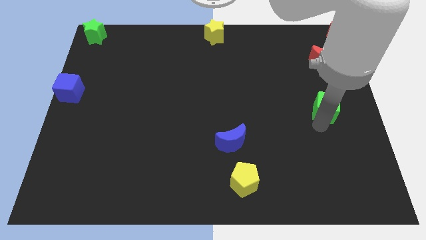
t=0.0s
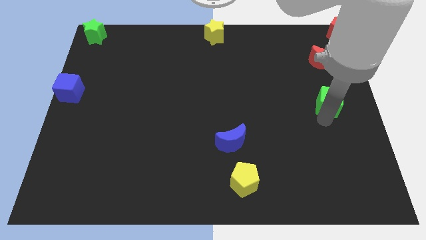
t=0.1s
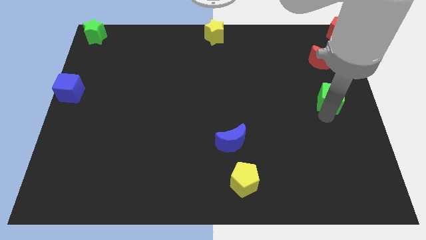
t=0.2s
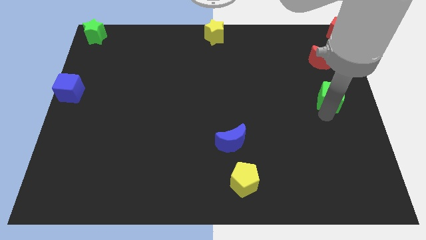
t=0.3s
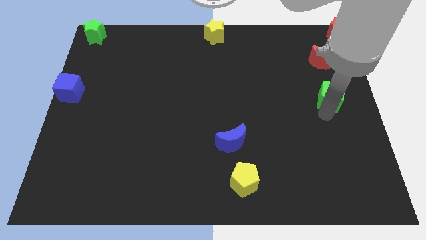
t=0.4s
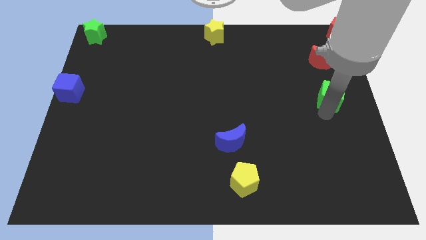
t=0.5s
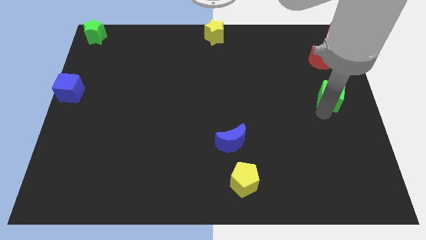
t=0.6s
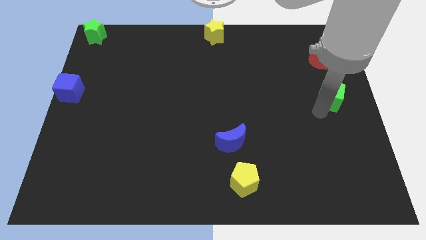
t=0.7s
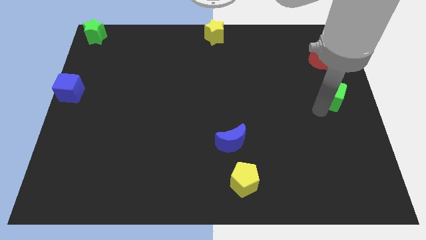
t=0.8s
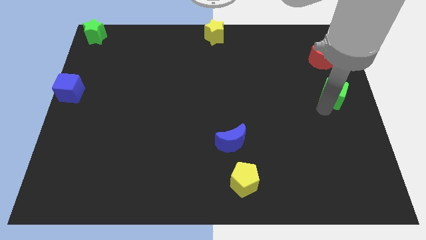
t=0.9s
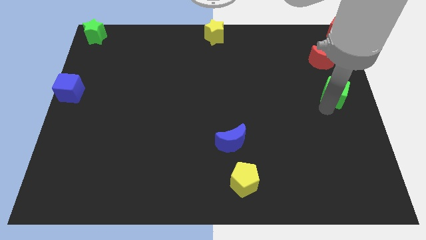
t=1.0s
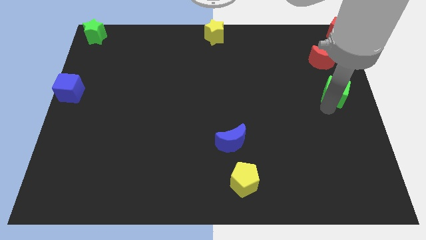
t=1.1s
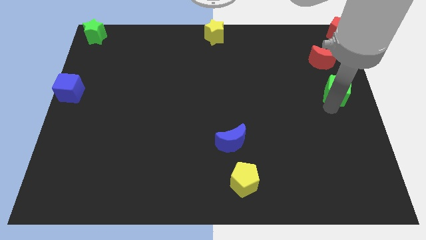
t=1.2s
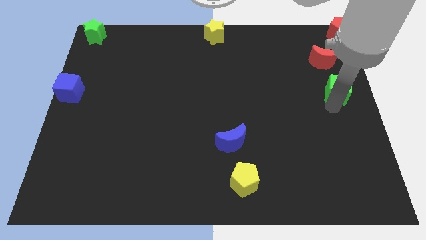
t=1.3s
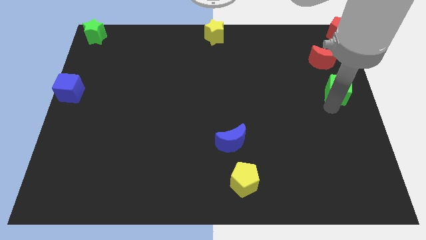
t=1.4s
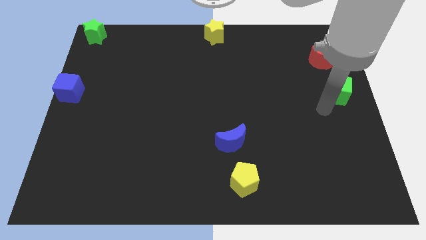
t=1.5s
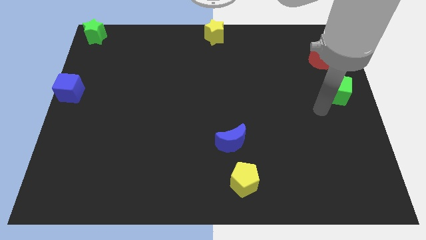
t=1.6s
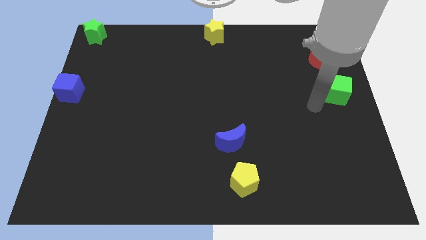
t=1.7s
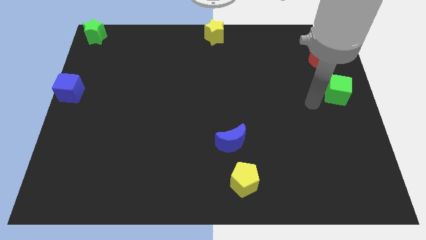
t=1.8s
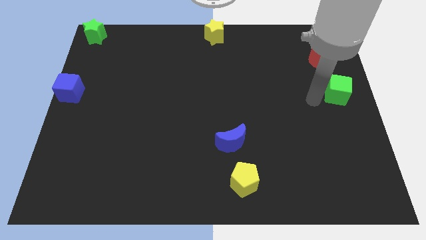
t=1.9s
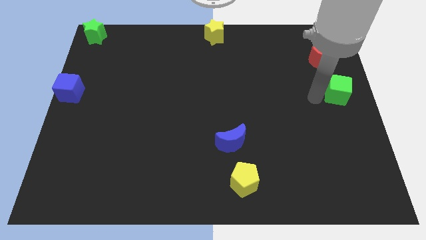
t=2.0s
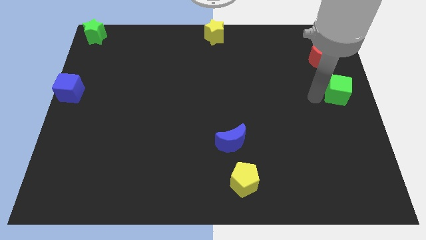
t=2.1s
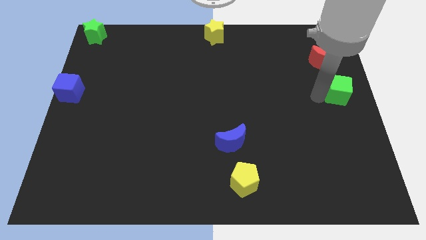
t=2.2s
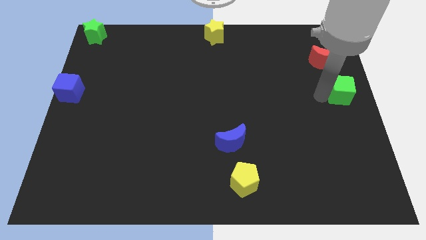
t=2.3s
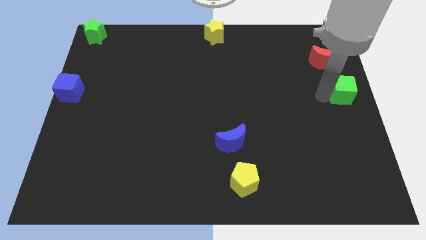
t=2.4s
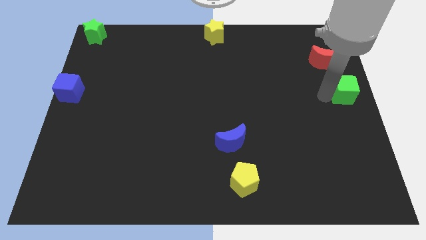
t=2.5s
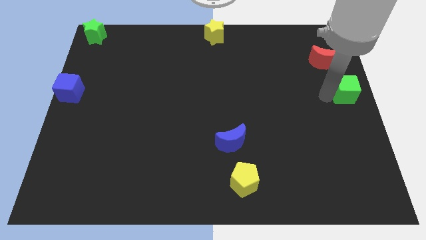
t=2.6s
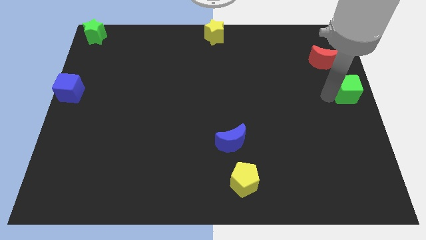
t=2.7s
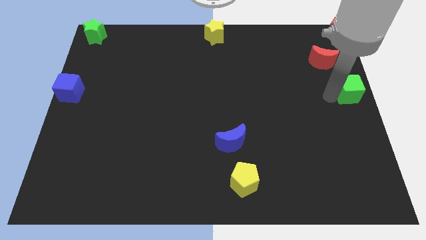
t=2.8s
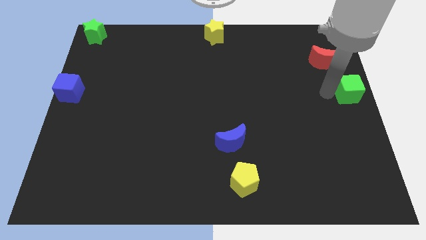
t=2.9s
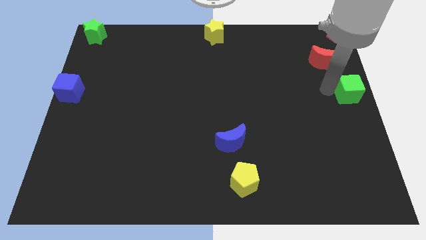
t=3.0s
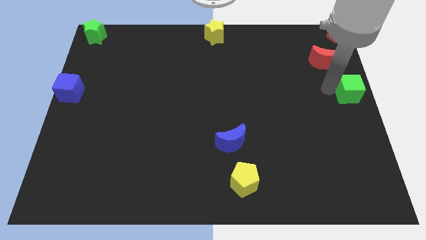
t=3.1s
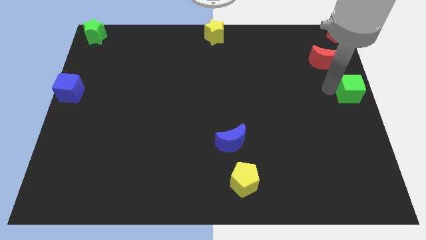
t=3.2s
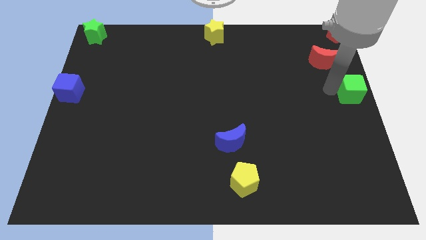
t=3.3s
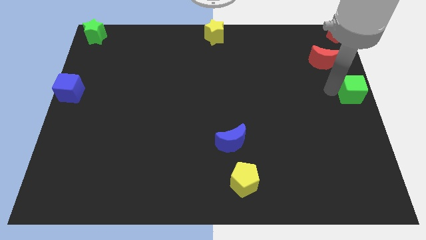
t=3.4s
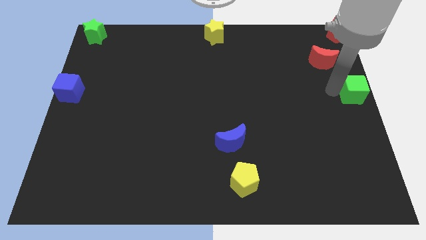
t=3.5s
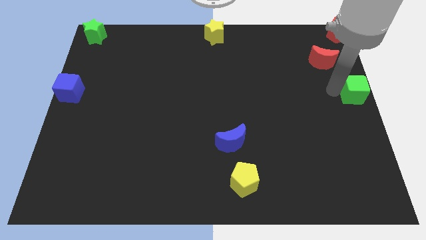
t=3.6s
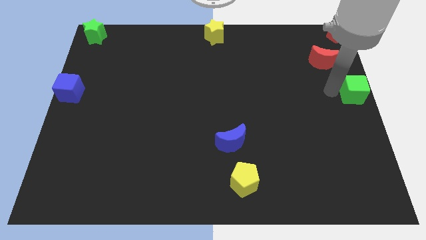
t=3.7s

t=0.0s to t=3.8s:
move the green cube to the right side of the table

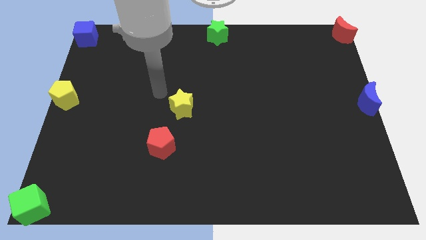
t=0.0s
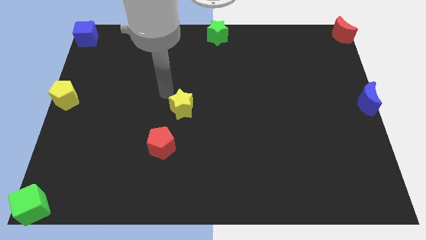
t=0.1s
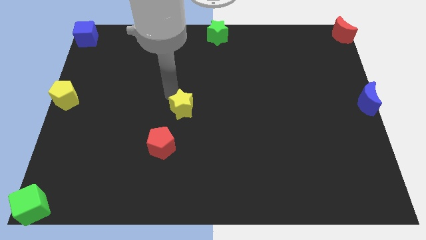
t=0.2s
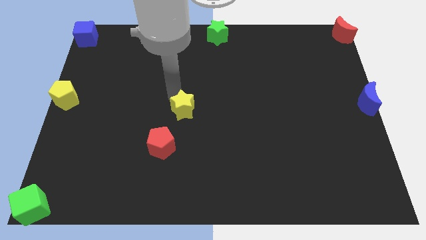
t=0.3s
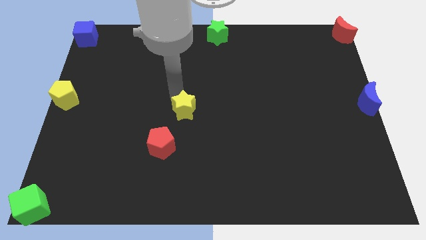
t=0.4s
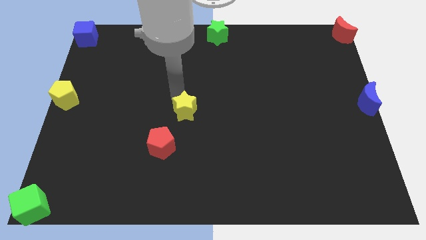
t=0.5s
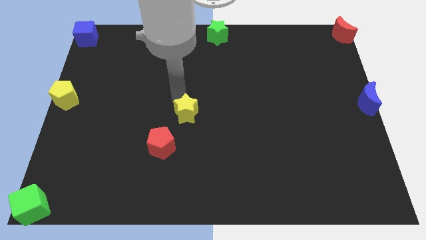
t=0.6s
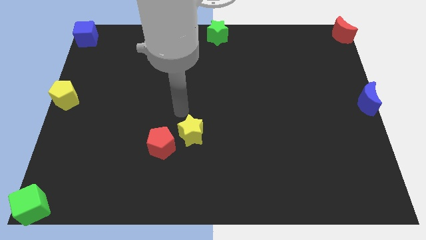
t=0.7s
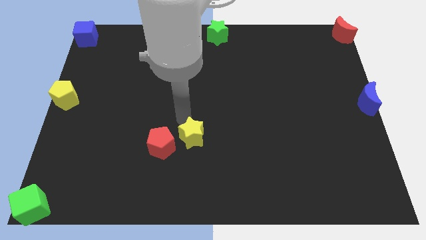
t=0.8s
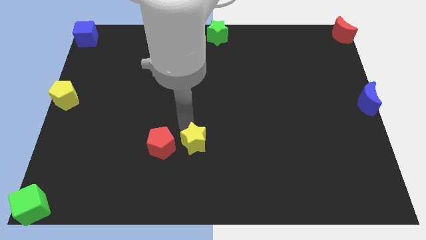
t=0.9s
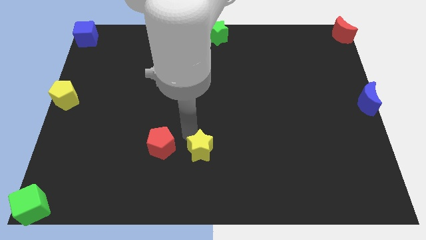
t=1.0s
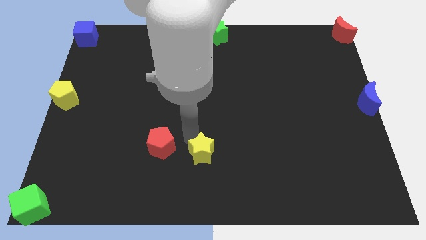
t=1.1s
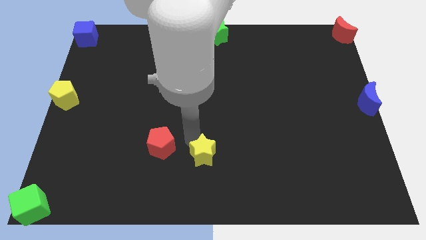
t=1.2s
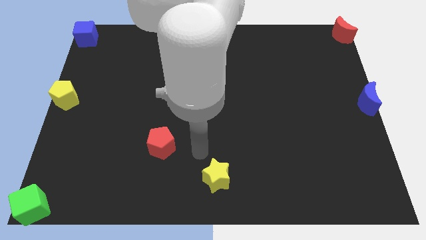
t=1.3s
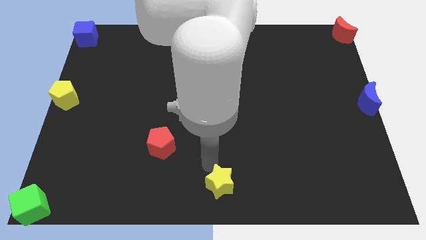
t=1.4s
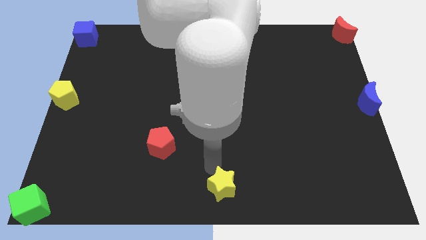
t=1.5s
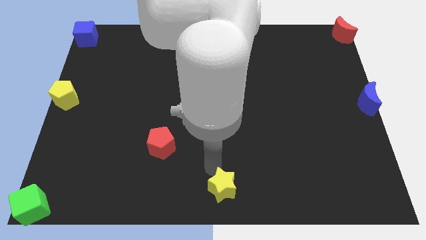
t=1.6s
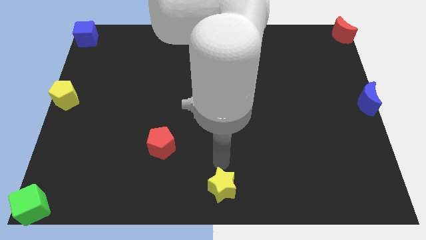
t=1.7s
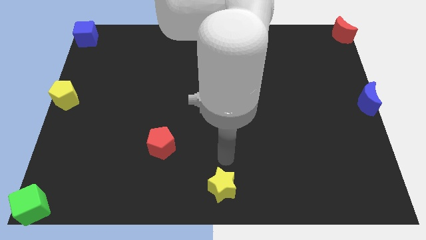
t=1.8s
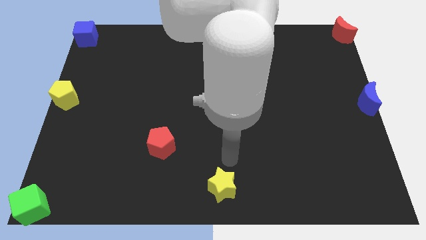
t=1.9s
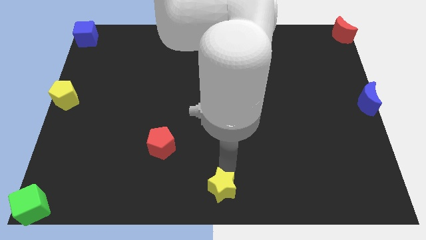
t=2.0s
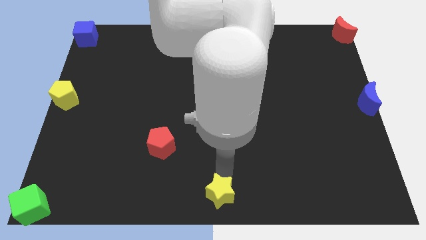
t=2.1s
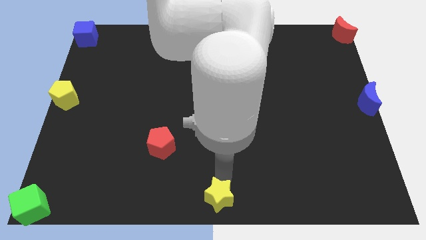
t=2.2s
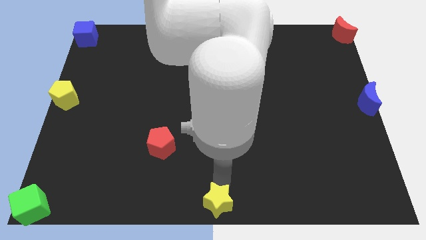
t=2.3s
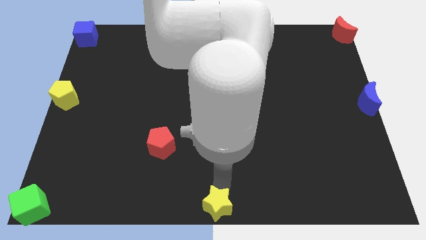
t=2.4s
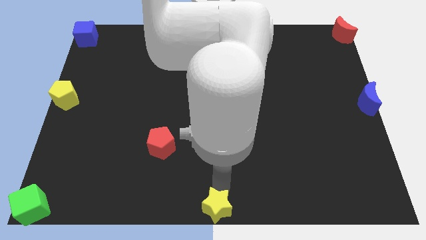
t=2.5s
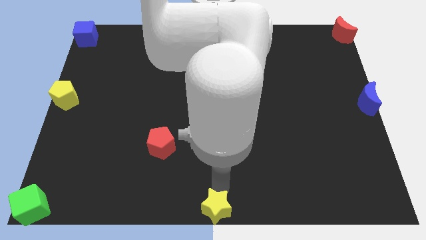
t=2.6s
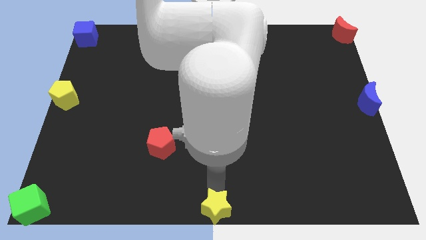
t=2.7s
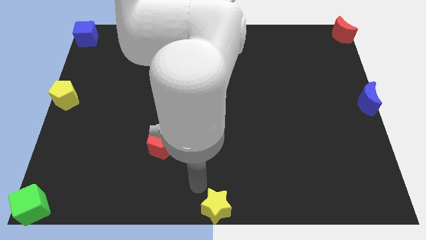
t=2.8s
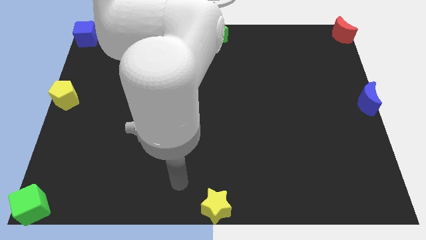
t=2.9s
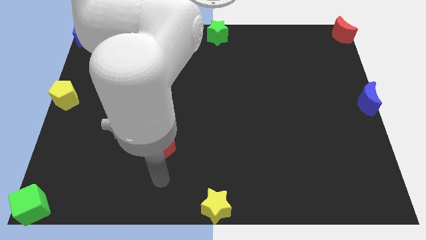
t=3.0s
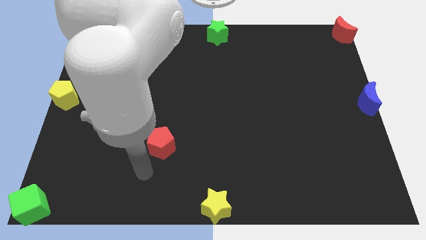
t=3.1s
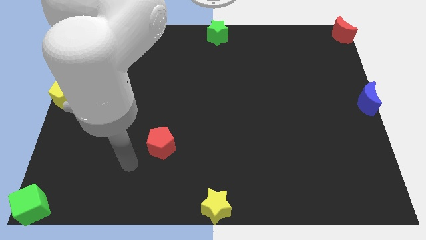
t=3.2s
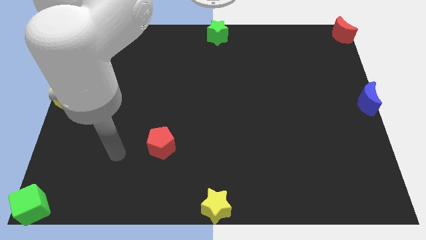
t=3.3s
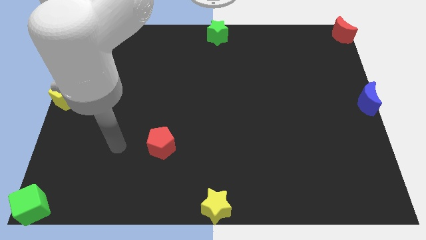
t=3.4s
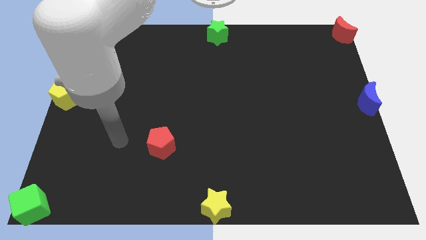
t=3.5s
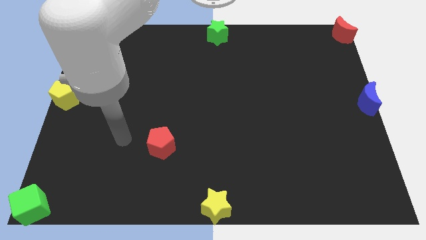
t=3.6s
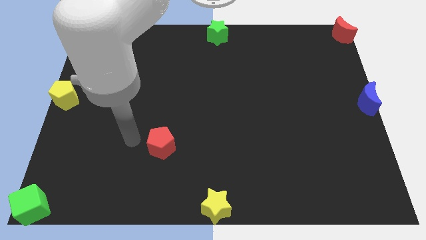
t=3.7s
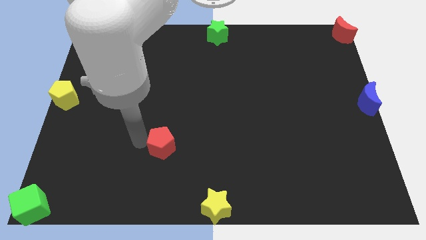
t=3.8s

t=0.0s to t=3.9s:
move yellow star to the bottom middle of the board

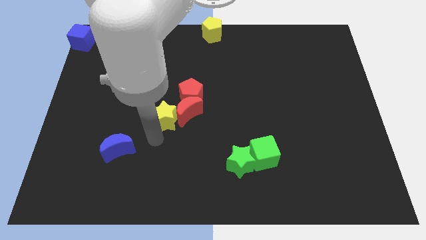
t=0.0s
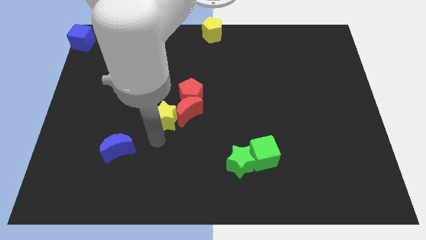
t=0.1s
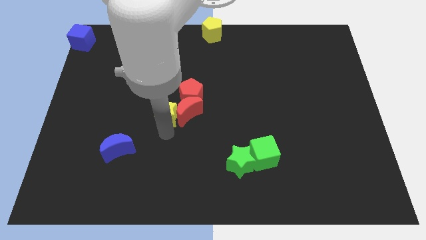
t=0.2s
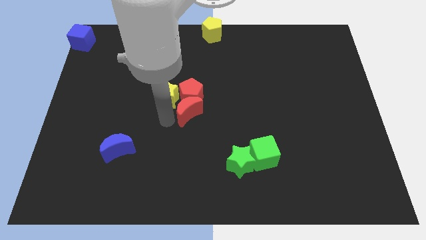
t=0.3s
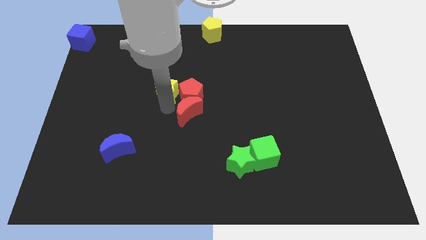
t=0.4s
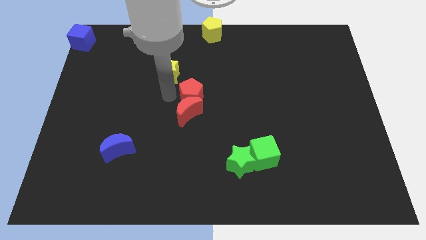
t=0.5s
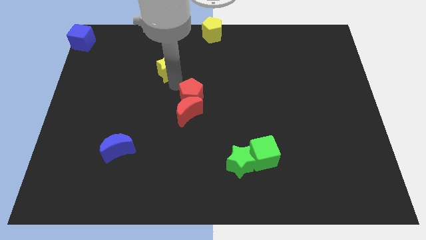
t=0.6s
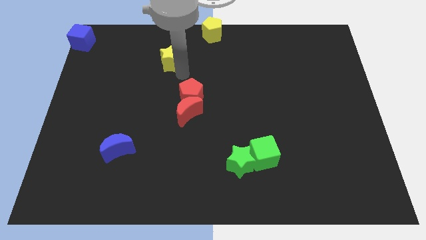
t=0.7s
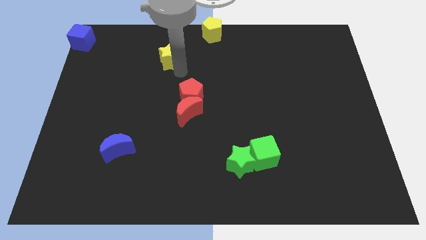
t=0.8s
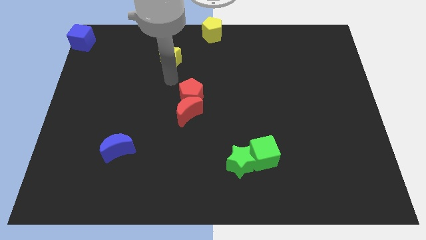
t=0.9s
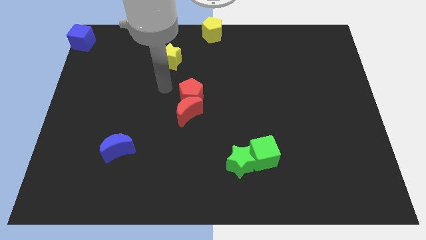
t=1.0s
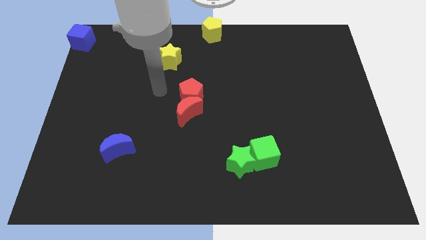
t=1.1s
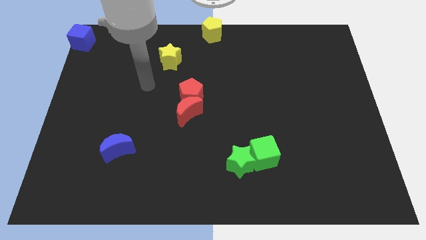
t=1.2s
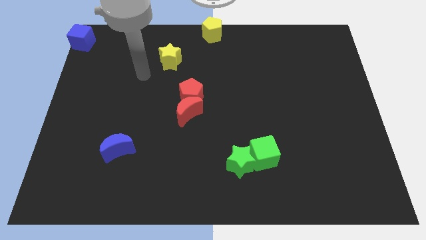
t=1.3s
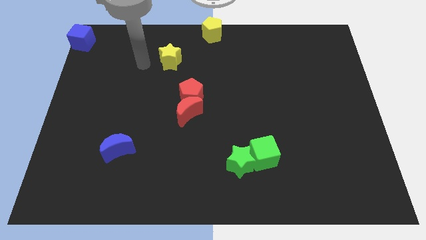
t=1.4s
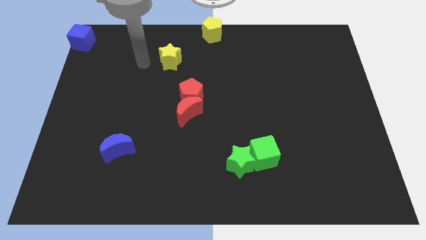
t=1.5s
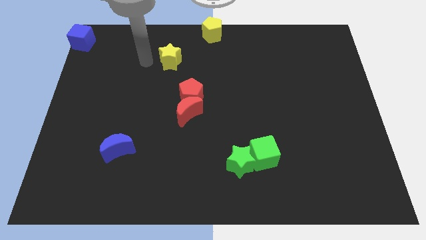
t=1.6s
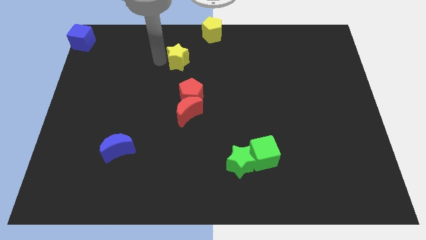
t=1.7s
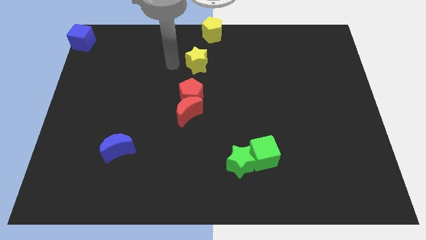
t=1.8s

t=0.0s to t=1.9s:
move the yellow star vertically at the top of the red pentagon
